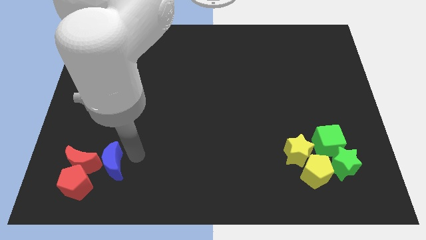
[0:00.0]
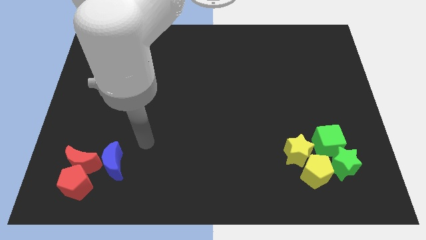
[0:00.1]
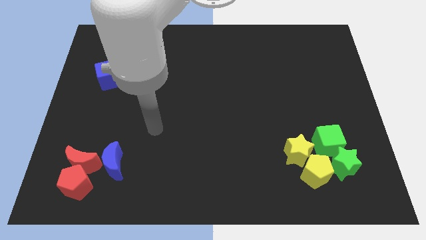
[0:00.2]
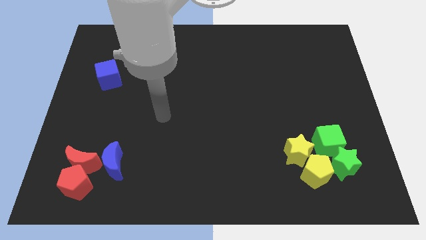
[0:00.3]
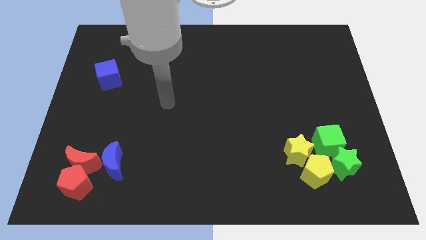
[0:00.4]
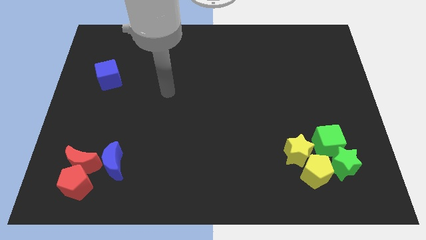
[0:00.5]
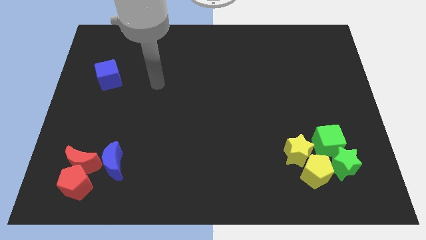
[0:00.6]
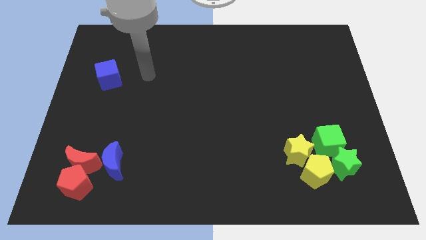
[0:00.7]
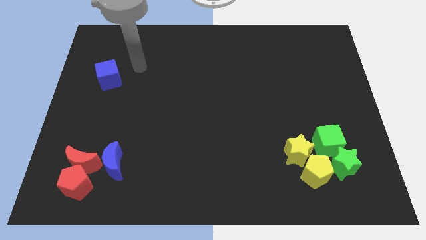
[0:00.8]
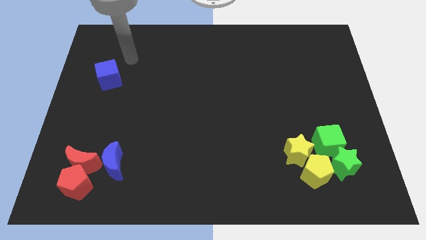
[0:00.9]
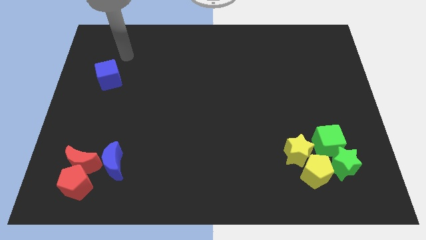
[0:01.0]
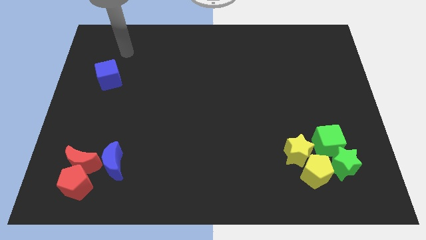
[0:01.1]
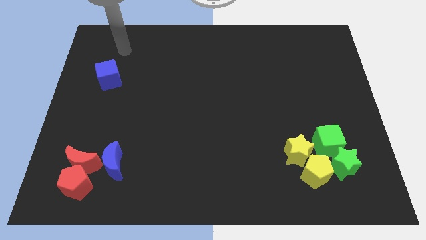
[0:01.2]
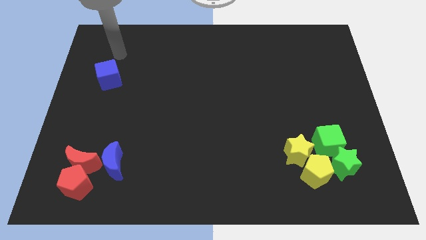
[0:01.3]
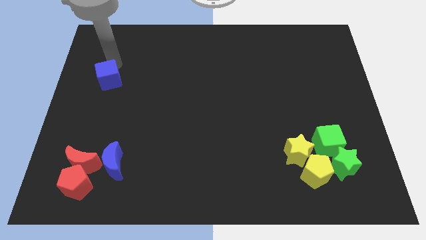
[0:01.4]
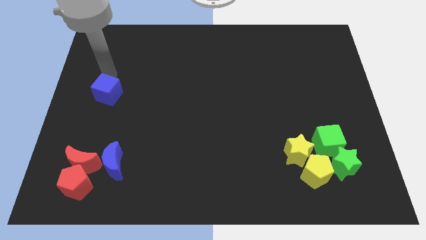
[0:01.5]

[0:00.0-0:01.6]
touch the blue cube

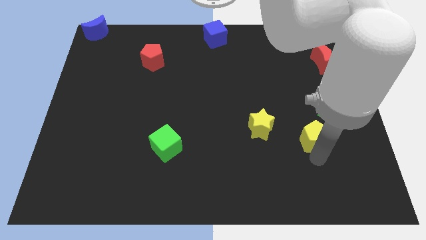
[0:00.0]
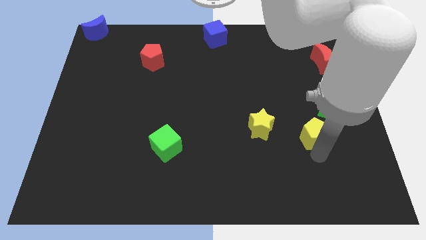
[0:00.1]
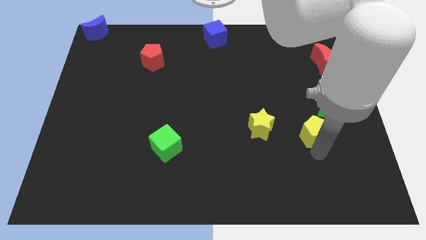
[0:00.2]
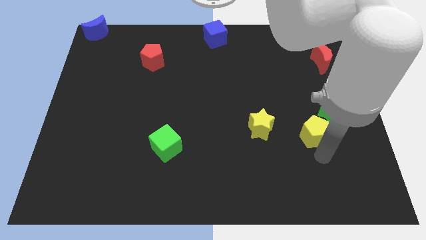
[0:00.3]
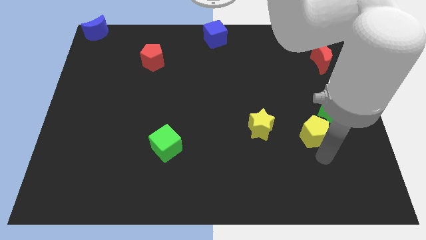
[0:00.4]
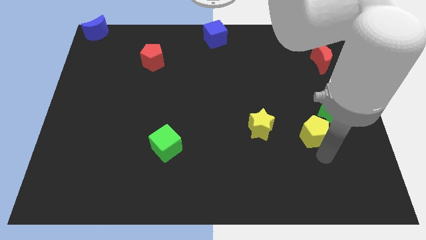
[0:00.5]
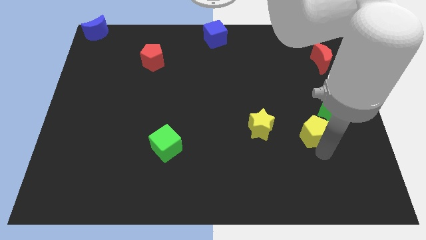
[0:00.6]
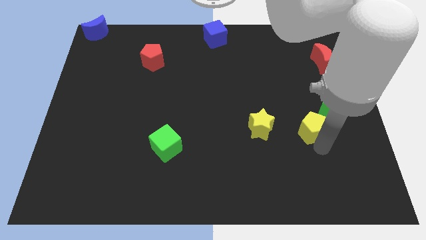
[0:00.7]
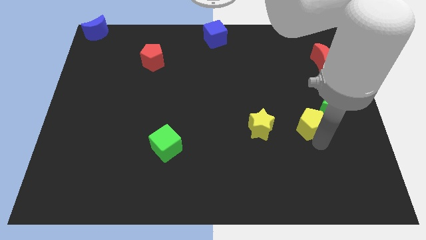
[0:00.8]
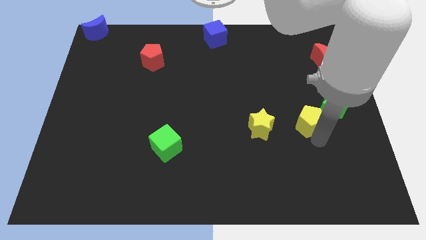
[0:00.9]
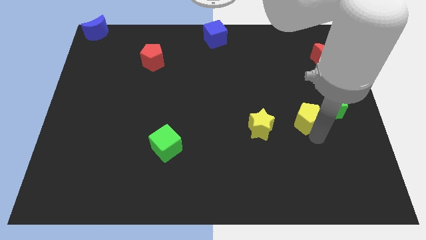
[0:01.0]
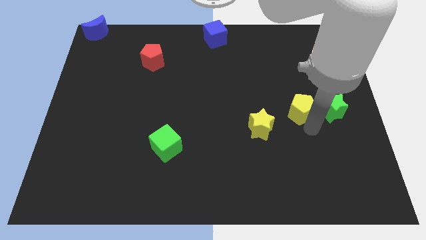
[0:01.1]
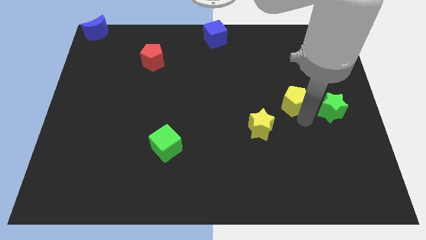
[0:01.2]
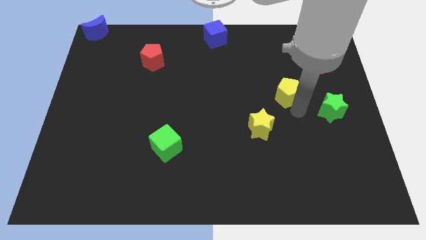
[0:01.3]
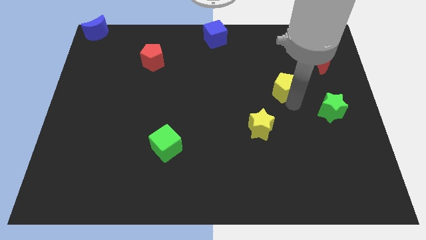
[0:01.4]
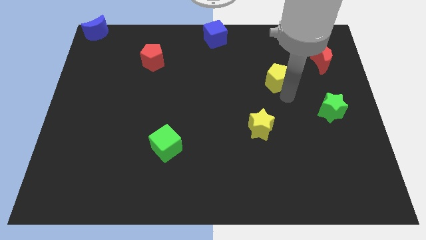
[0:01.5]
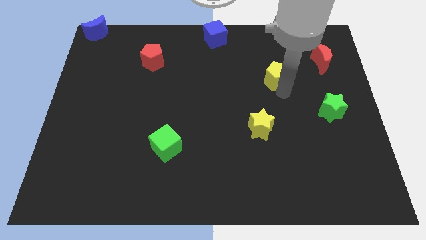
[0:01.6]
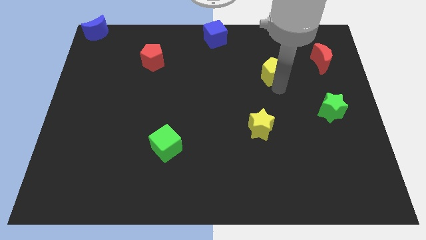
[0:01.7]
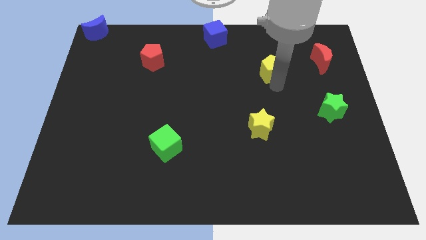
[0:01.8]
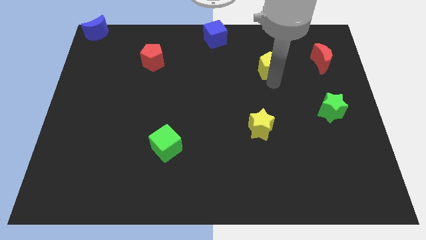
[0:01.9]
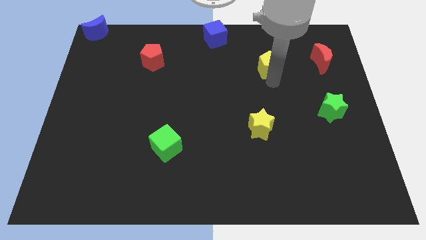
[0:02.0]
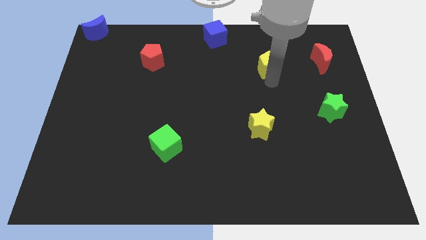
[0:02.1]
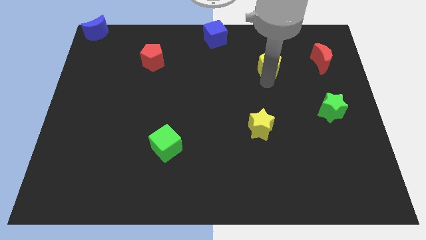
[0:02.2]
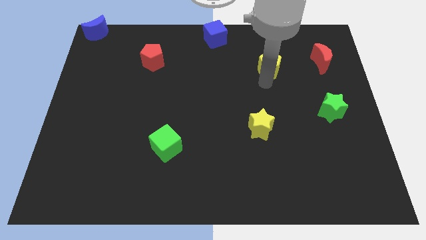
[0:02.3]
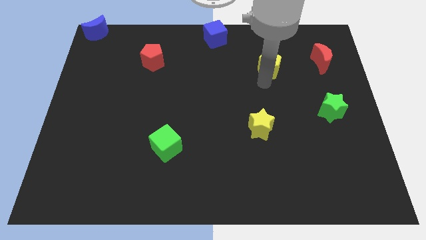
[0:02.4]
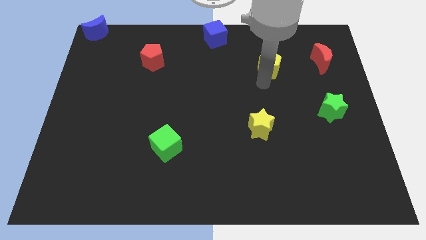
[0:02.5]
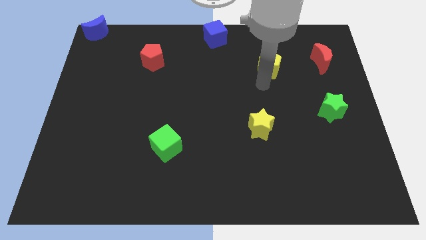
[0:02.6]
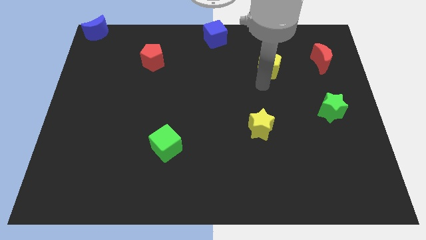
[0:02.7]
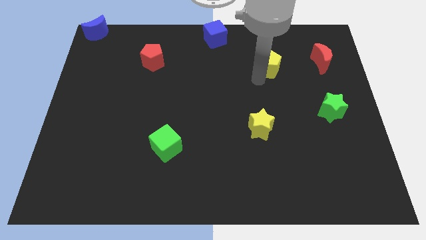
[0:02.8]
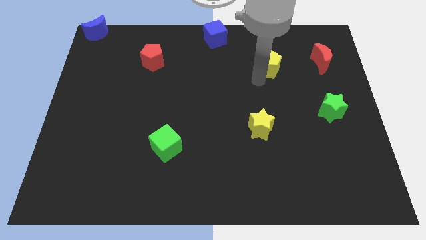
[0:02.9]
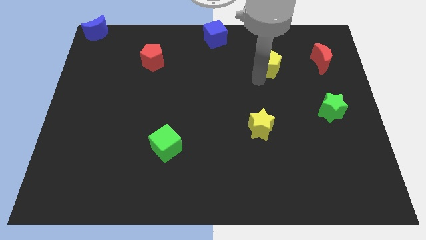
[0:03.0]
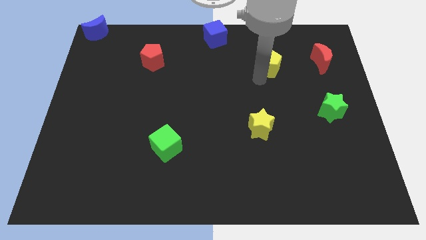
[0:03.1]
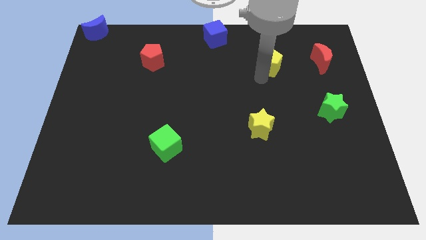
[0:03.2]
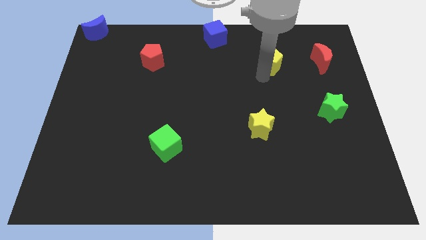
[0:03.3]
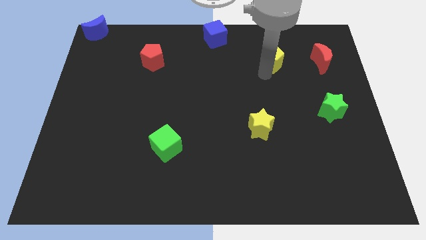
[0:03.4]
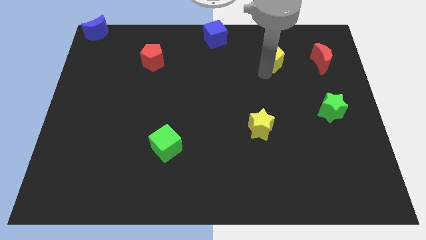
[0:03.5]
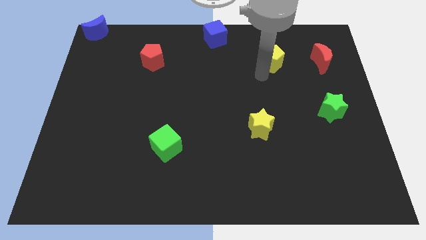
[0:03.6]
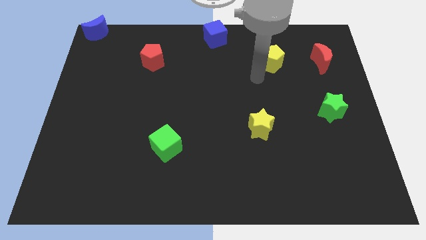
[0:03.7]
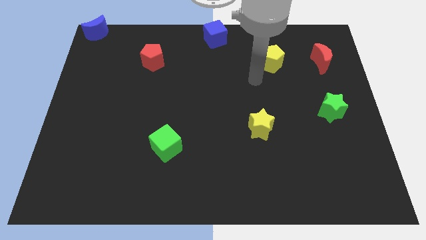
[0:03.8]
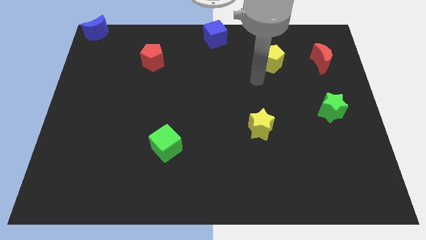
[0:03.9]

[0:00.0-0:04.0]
move the yellow pentagon horizontally at the left side of the red moon

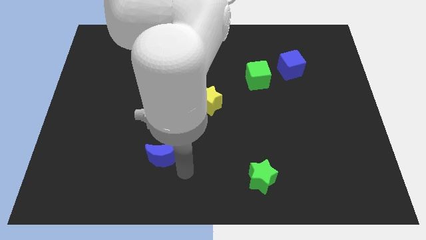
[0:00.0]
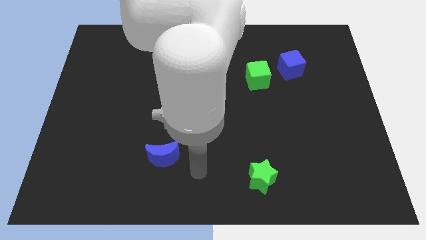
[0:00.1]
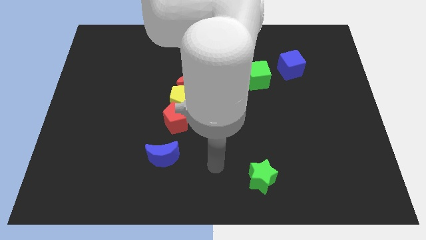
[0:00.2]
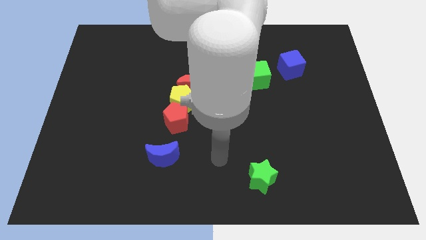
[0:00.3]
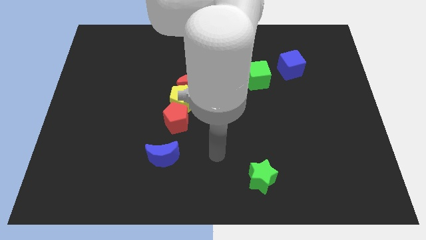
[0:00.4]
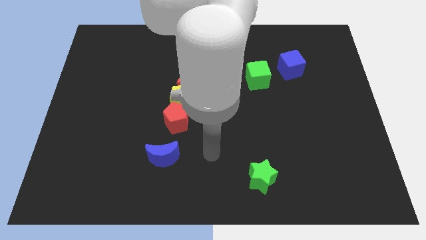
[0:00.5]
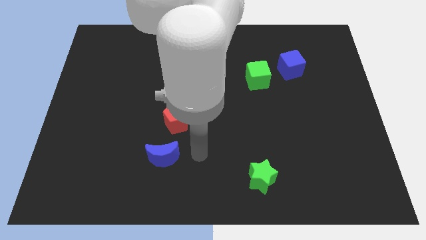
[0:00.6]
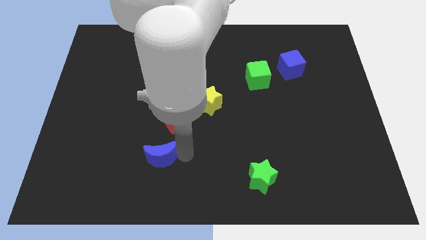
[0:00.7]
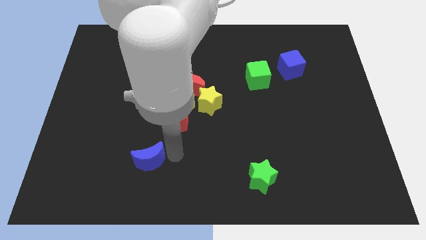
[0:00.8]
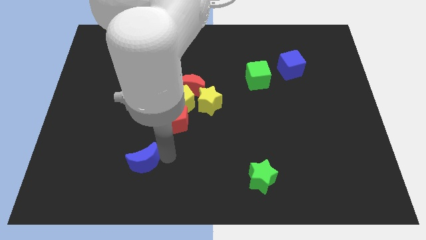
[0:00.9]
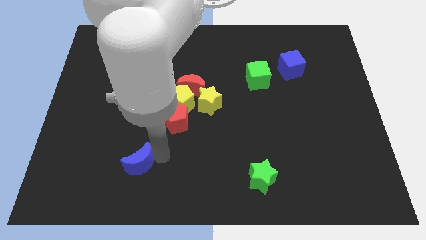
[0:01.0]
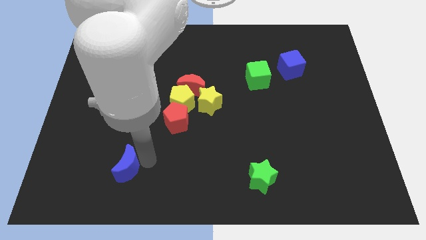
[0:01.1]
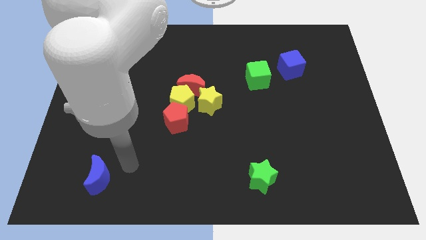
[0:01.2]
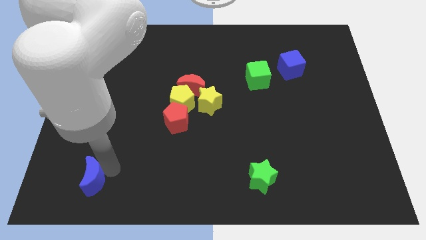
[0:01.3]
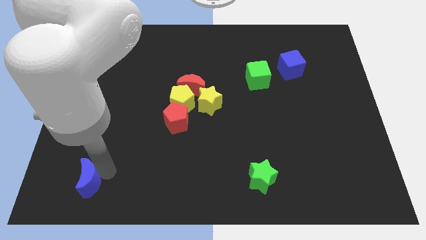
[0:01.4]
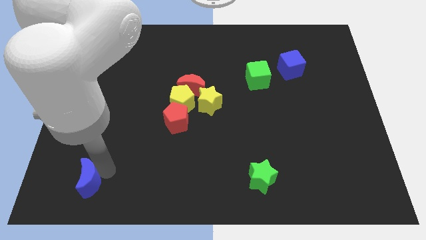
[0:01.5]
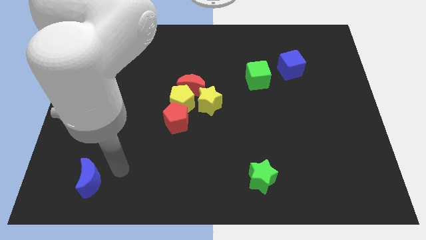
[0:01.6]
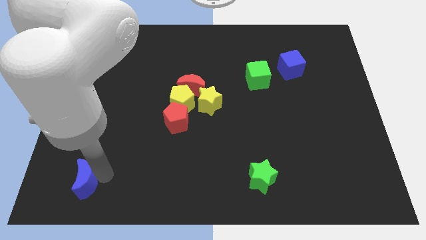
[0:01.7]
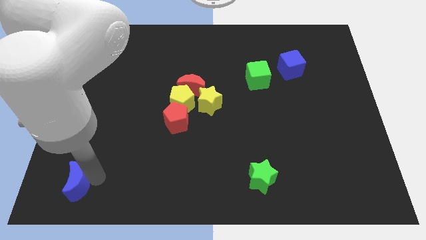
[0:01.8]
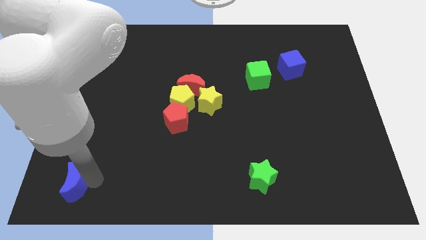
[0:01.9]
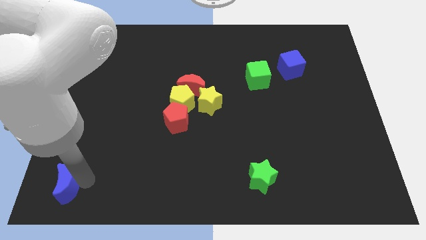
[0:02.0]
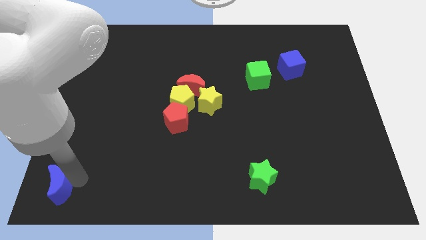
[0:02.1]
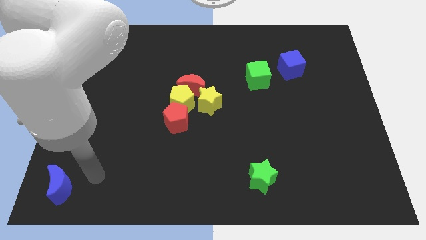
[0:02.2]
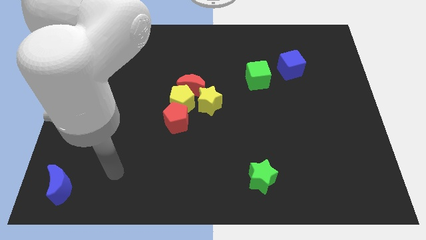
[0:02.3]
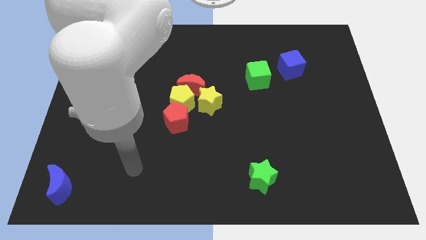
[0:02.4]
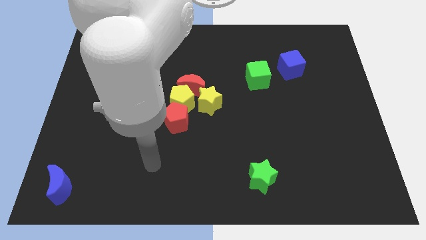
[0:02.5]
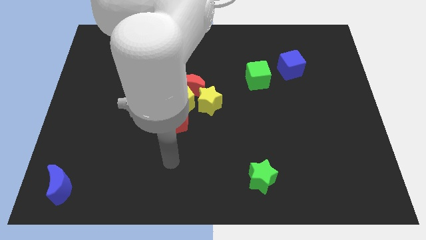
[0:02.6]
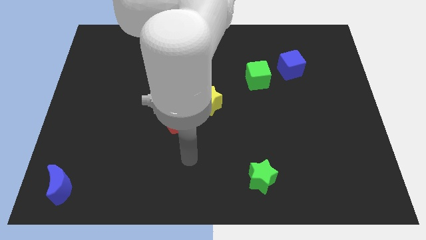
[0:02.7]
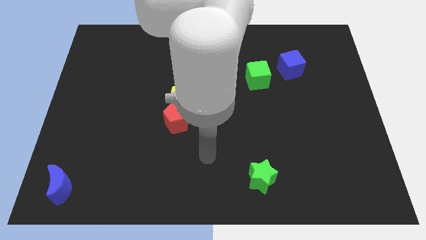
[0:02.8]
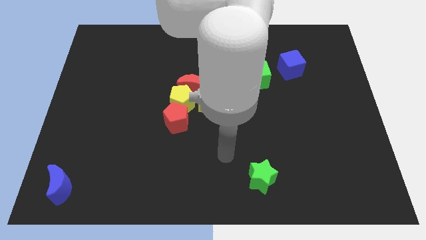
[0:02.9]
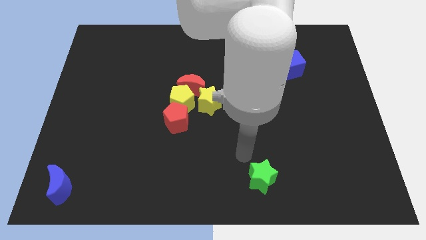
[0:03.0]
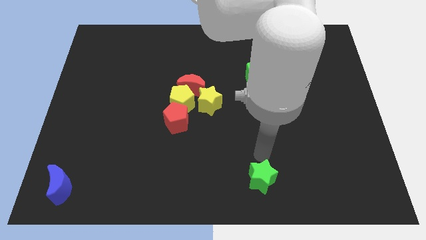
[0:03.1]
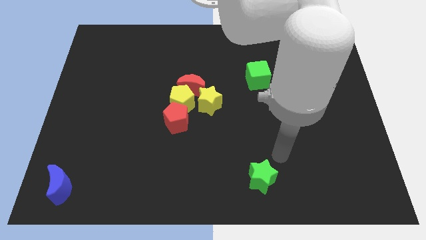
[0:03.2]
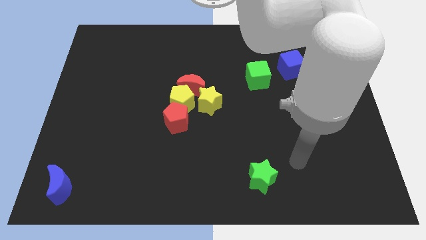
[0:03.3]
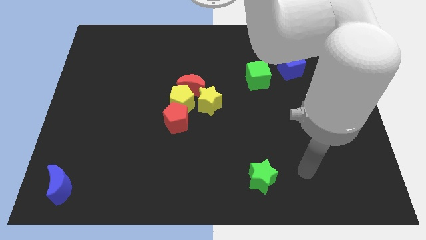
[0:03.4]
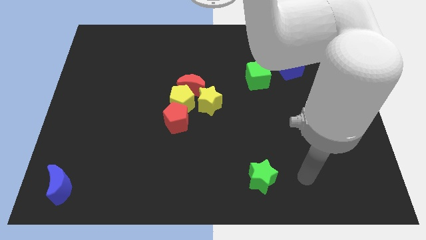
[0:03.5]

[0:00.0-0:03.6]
push the blue crescent towards the bottom left of the board
